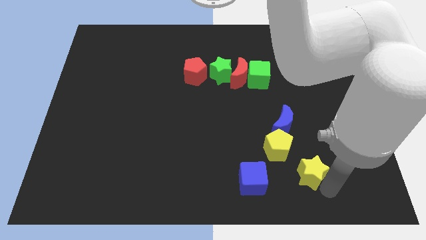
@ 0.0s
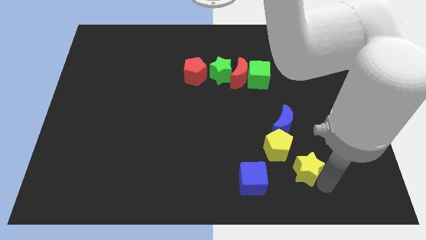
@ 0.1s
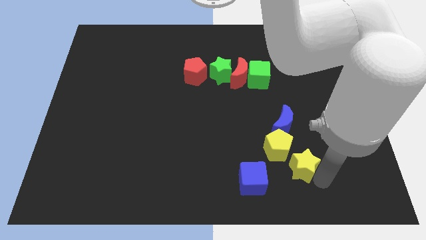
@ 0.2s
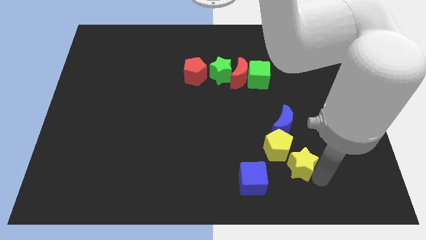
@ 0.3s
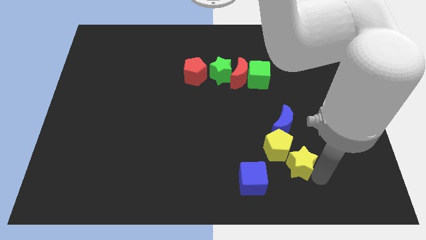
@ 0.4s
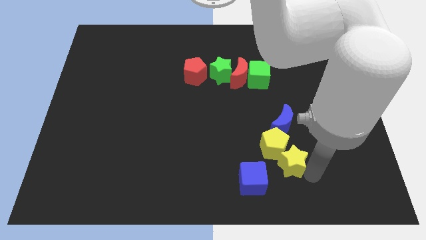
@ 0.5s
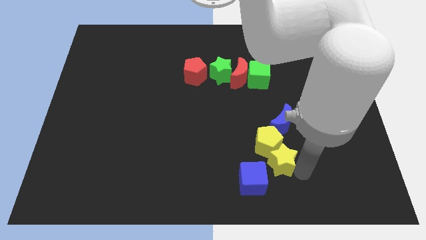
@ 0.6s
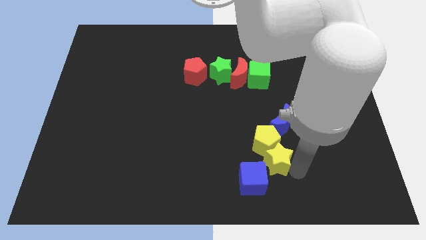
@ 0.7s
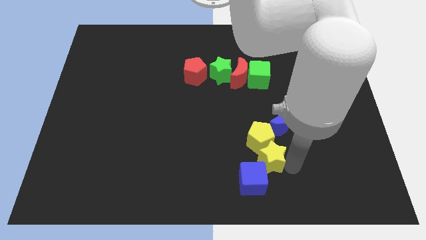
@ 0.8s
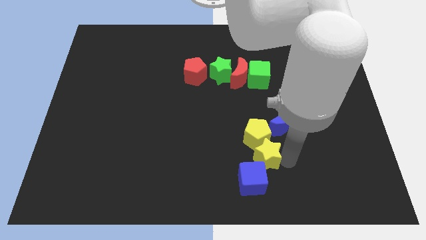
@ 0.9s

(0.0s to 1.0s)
push the yellow star into the yellow pentagon

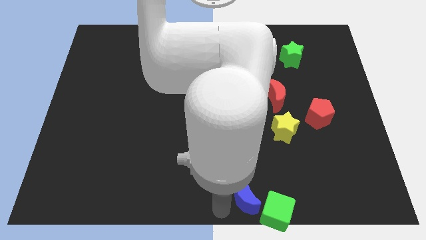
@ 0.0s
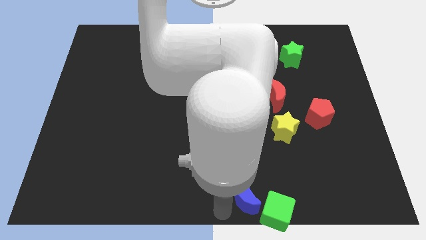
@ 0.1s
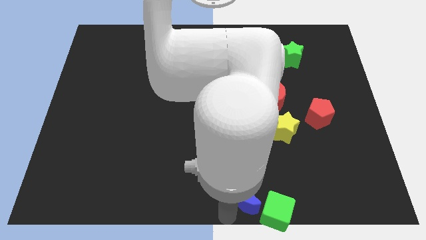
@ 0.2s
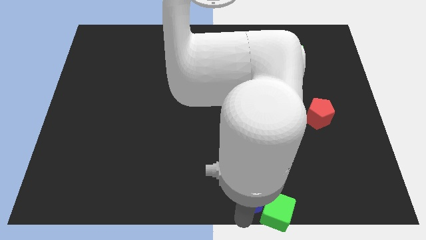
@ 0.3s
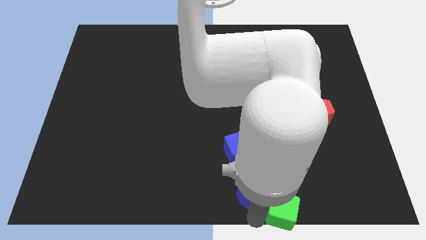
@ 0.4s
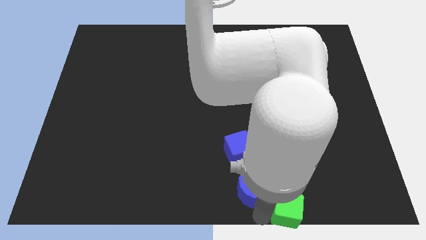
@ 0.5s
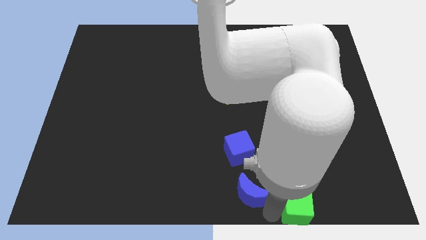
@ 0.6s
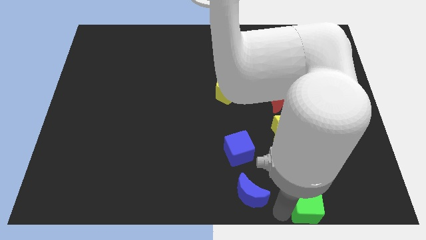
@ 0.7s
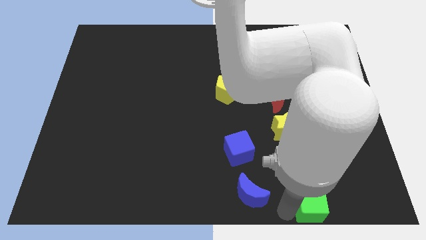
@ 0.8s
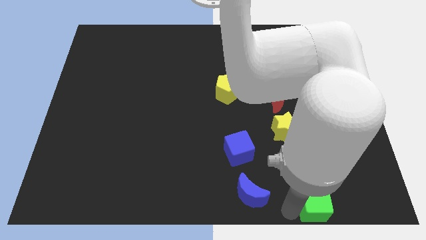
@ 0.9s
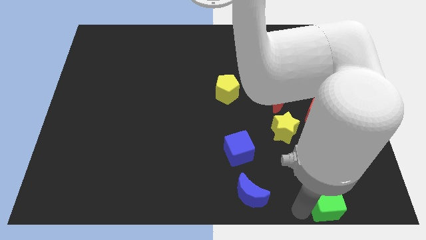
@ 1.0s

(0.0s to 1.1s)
separate green cube from blue moon

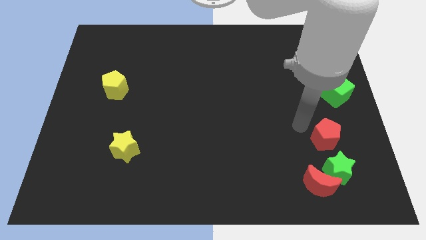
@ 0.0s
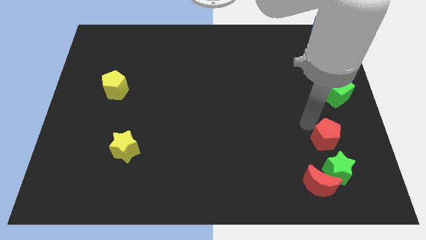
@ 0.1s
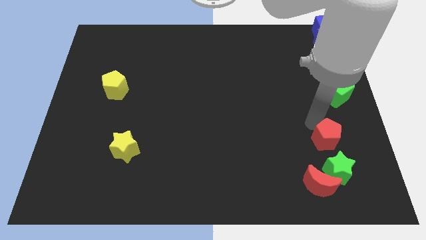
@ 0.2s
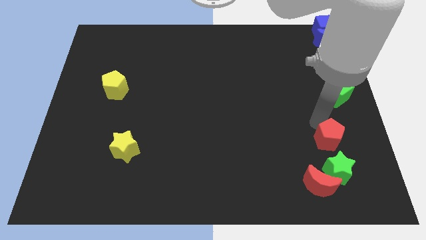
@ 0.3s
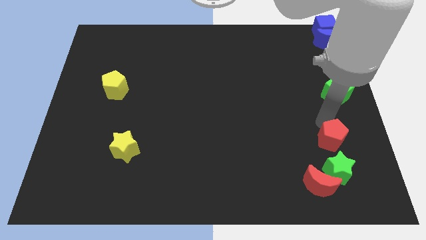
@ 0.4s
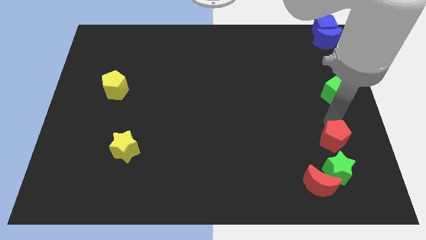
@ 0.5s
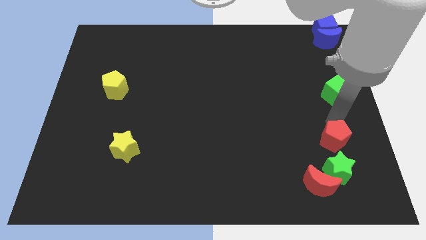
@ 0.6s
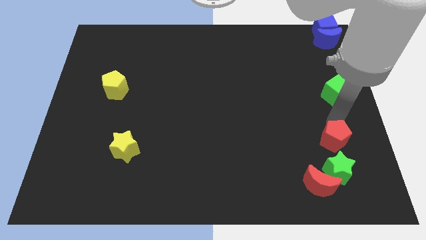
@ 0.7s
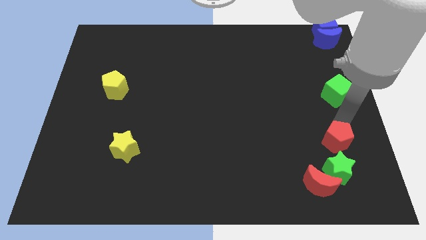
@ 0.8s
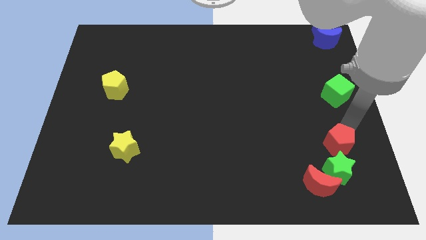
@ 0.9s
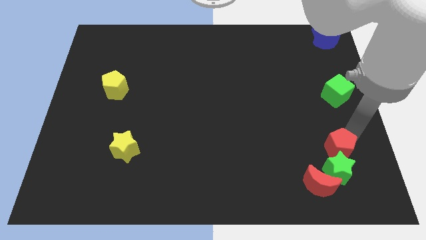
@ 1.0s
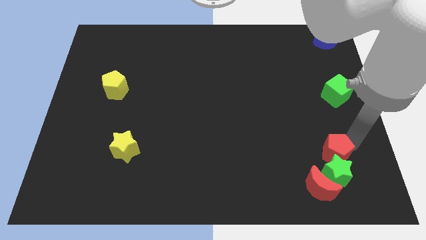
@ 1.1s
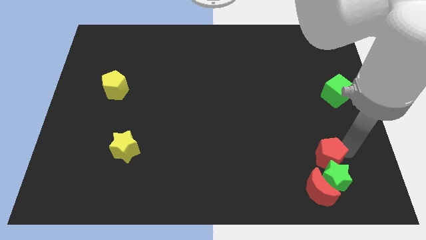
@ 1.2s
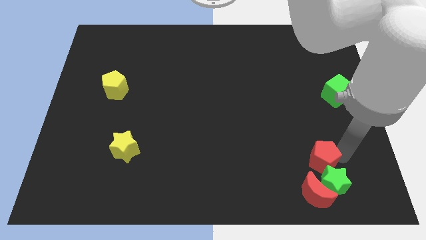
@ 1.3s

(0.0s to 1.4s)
push the red pentagon onto the green star

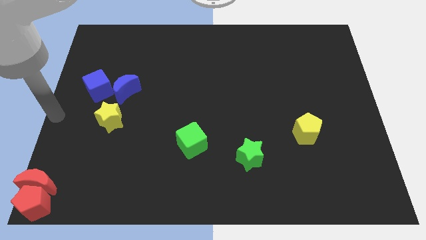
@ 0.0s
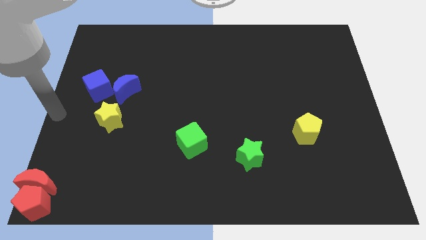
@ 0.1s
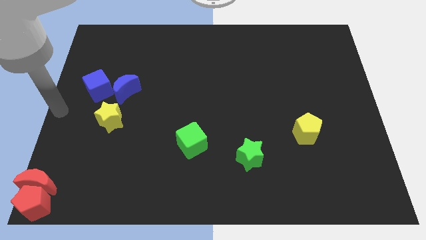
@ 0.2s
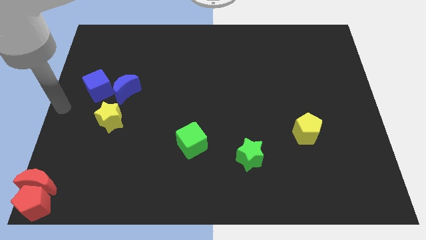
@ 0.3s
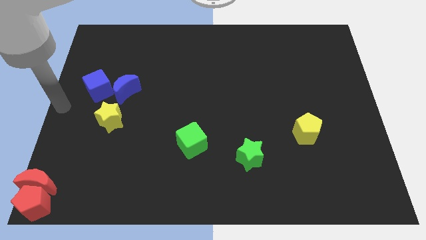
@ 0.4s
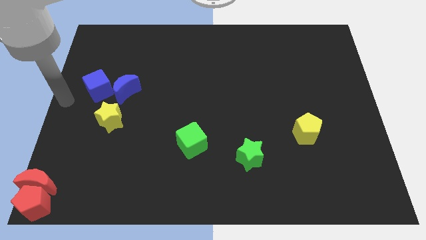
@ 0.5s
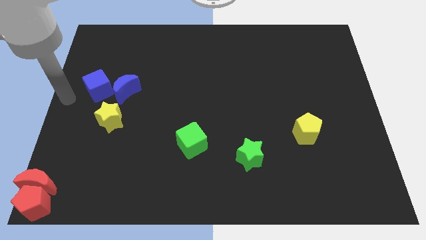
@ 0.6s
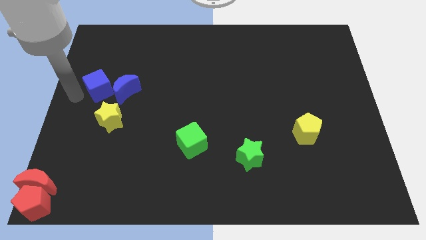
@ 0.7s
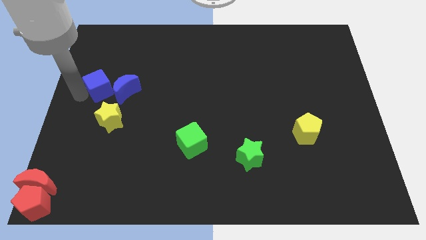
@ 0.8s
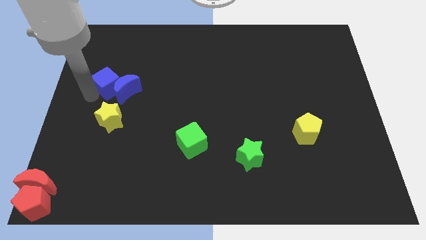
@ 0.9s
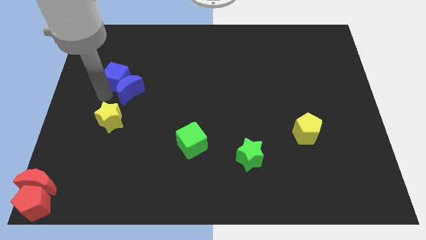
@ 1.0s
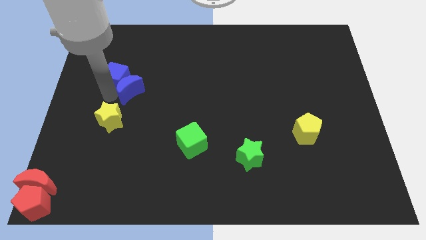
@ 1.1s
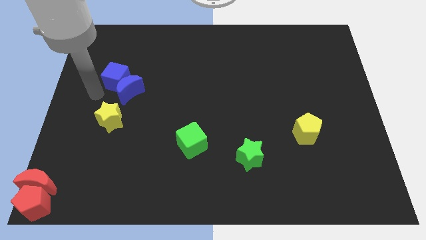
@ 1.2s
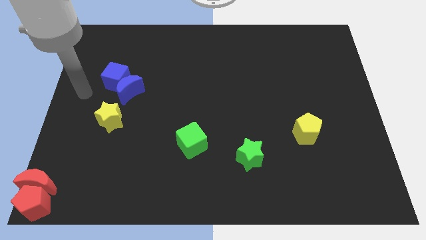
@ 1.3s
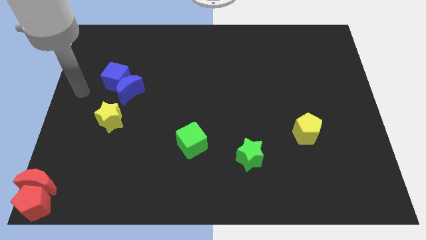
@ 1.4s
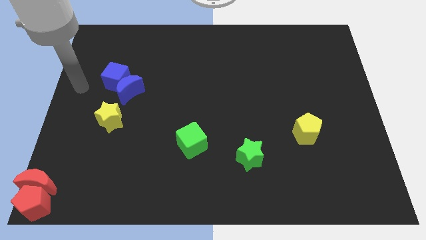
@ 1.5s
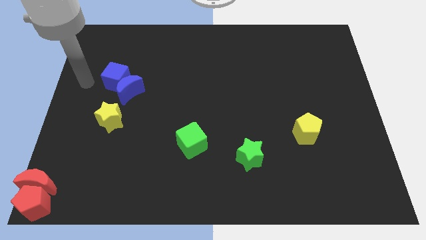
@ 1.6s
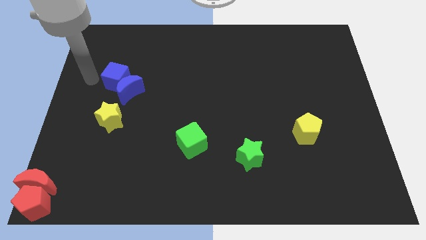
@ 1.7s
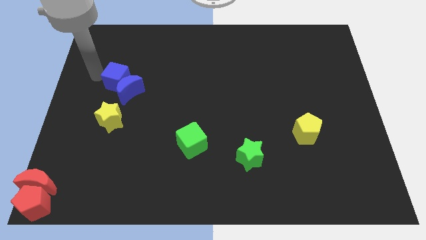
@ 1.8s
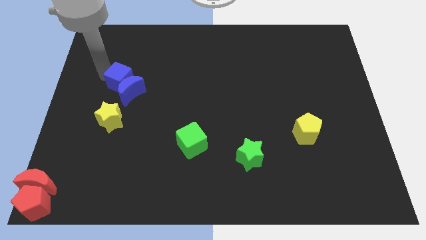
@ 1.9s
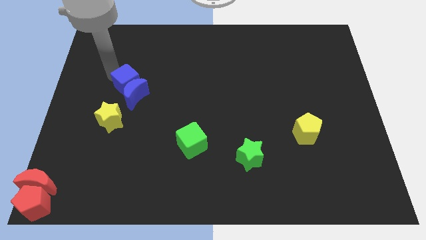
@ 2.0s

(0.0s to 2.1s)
attach the blue cube to the blue moon

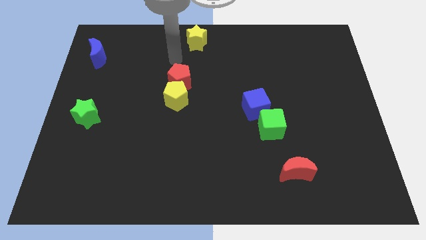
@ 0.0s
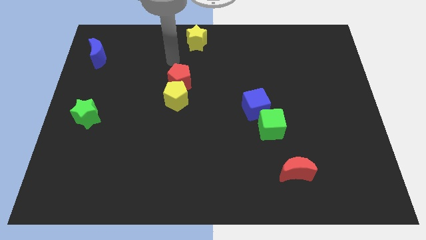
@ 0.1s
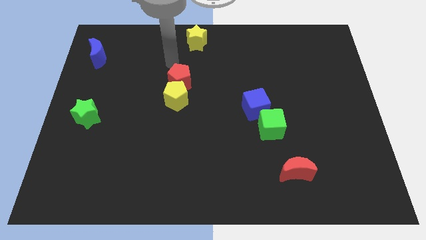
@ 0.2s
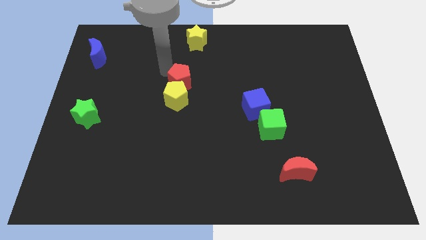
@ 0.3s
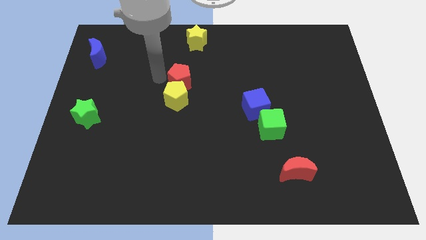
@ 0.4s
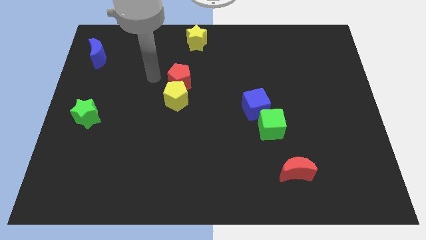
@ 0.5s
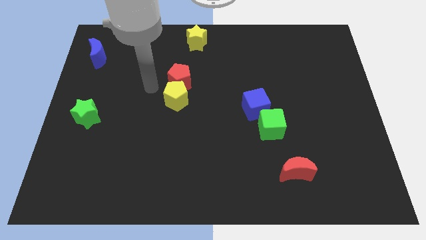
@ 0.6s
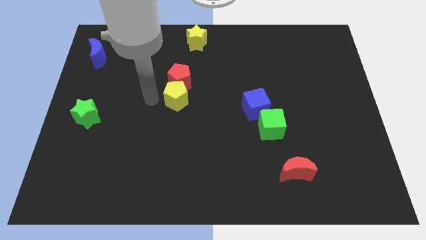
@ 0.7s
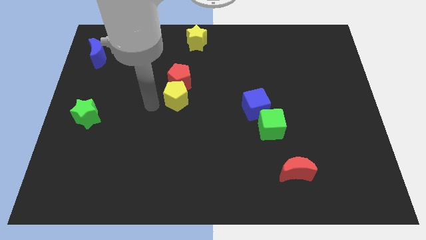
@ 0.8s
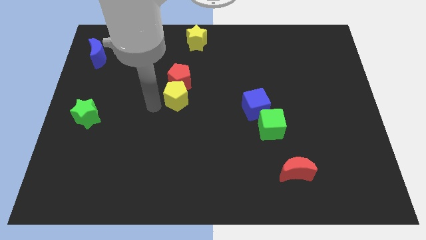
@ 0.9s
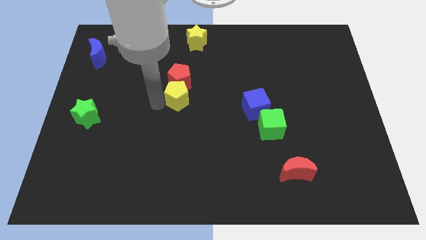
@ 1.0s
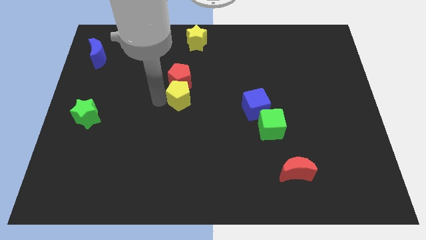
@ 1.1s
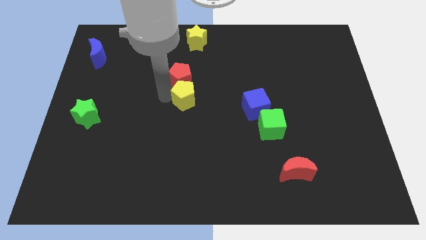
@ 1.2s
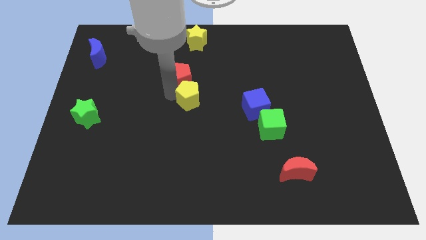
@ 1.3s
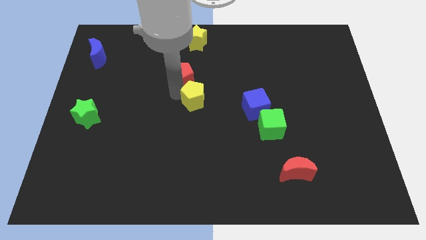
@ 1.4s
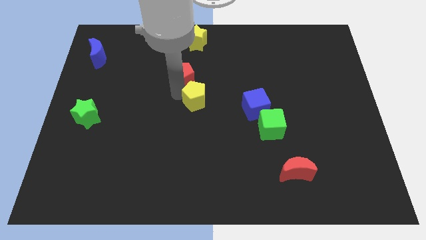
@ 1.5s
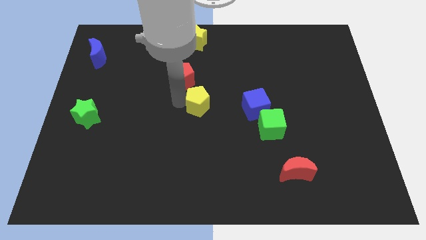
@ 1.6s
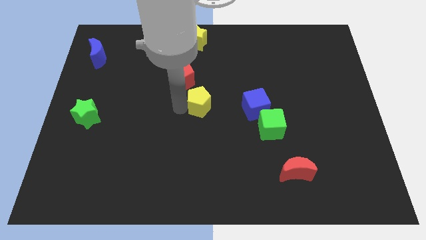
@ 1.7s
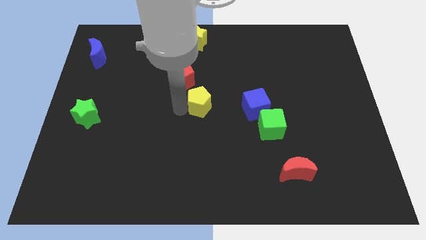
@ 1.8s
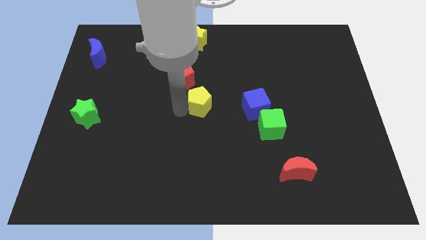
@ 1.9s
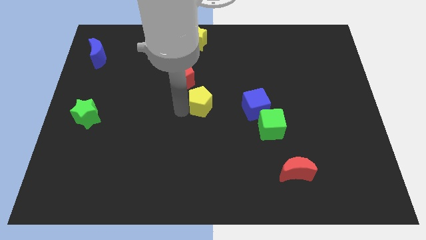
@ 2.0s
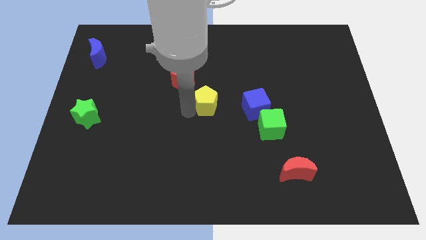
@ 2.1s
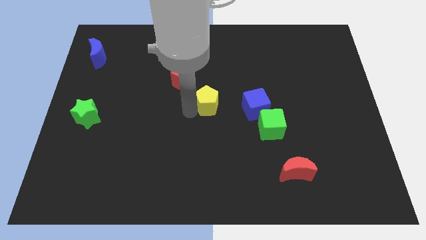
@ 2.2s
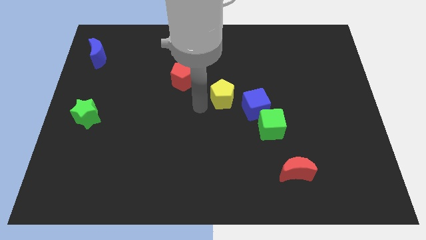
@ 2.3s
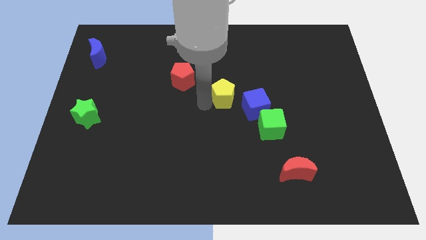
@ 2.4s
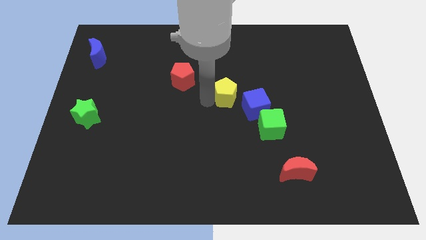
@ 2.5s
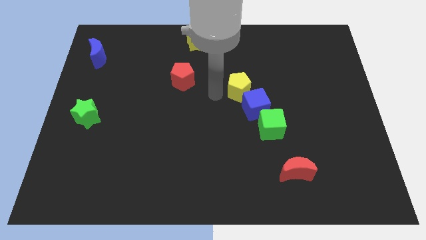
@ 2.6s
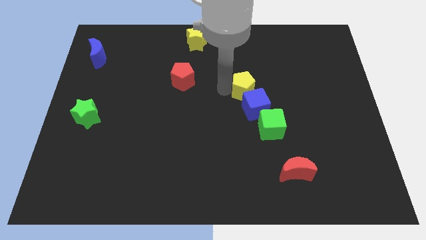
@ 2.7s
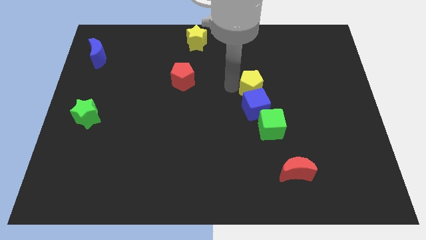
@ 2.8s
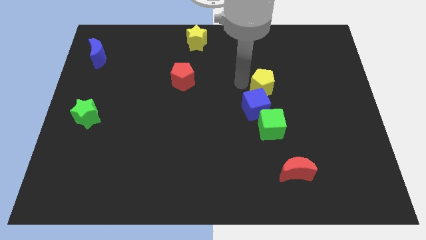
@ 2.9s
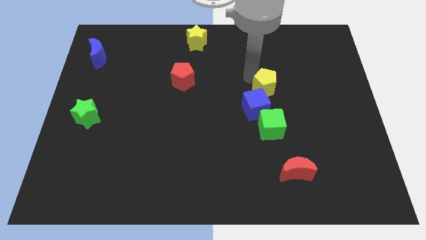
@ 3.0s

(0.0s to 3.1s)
separate red and the yellow pentagon

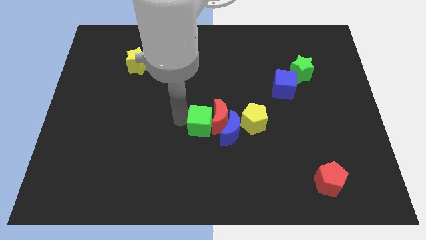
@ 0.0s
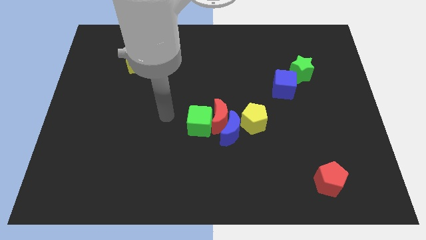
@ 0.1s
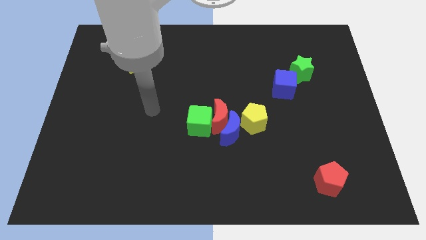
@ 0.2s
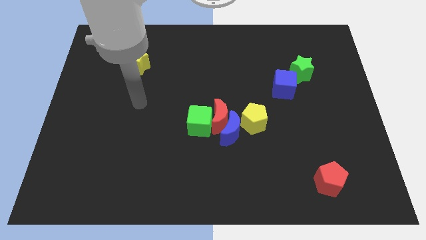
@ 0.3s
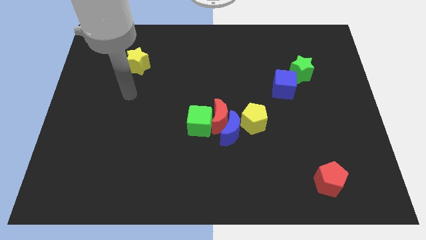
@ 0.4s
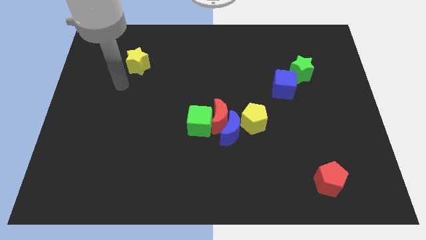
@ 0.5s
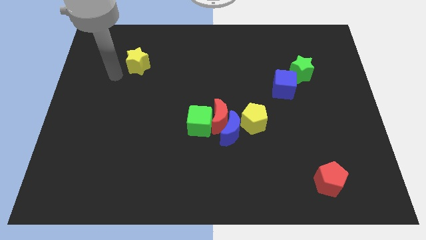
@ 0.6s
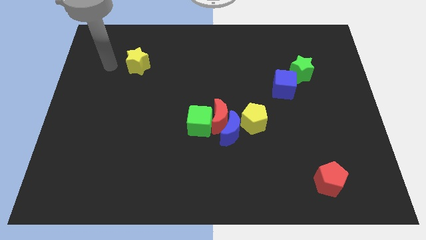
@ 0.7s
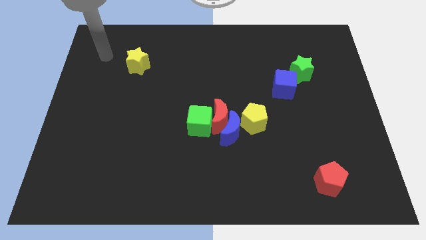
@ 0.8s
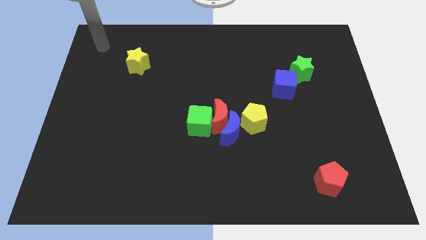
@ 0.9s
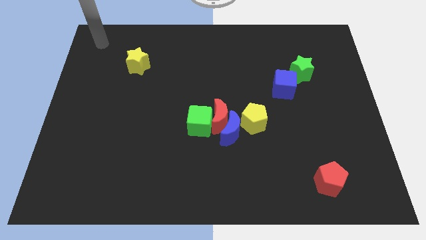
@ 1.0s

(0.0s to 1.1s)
move your arm towards the top left corner of the board
